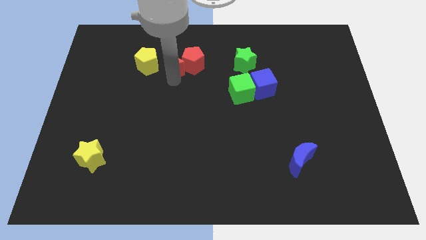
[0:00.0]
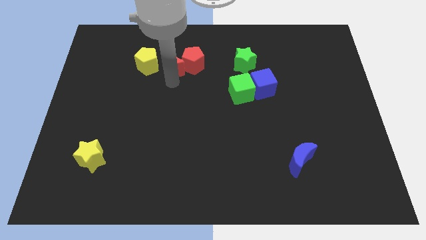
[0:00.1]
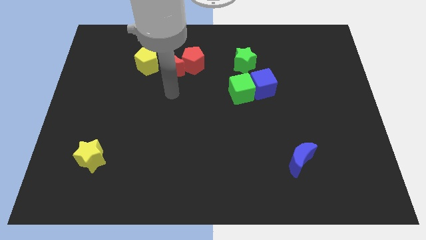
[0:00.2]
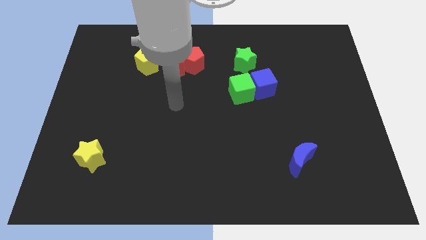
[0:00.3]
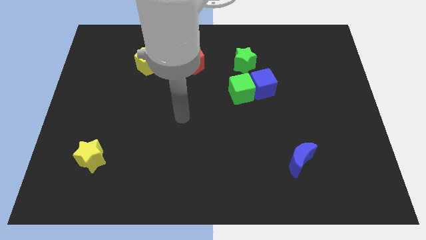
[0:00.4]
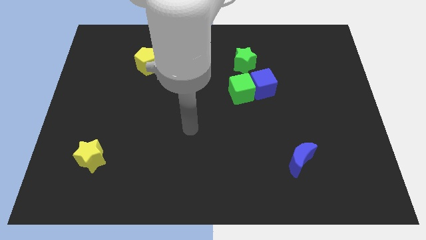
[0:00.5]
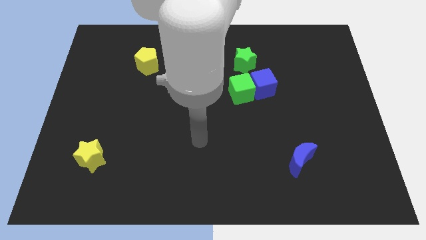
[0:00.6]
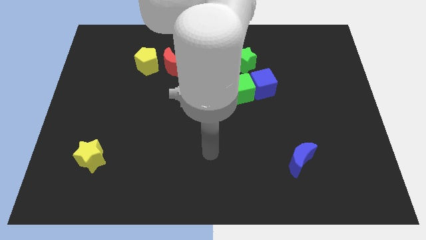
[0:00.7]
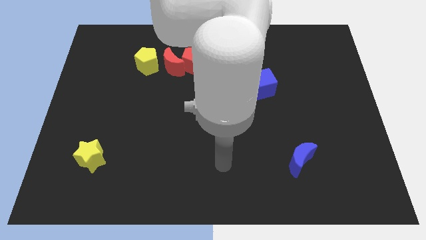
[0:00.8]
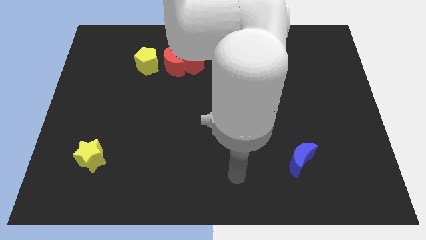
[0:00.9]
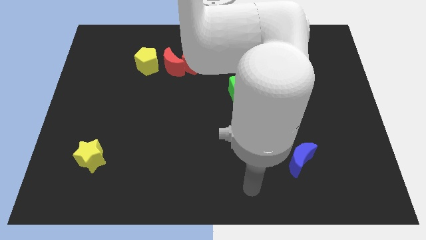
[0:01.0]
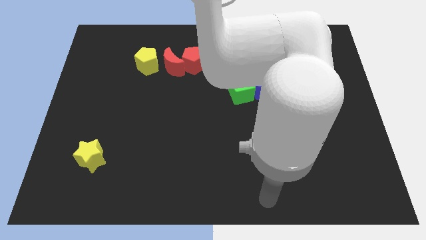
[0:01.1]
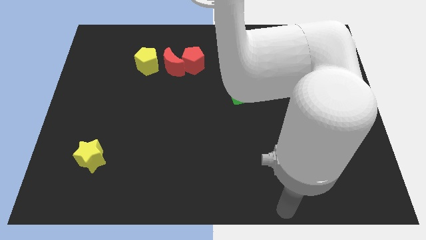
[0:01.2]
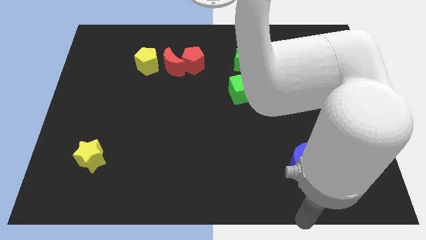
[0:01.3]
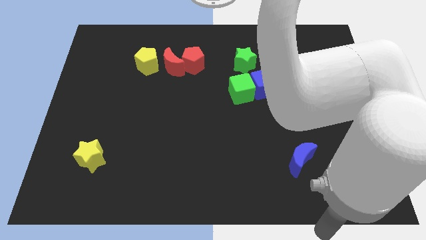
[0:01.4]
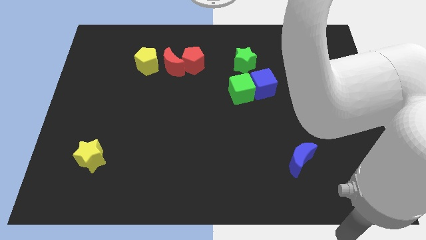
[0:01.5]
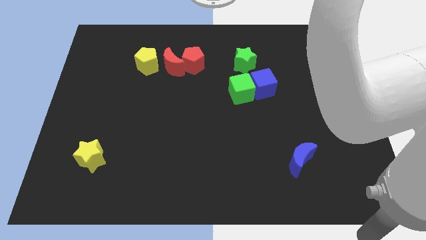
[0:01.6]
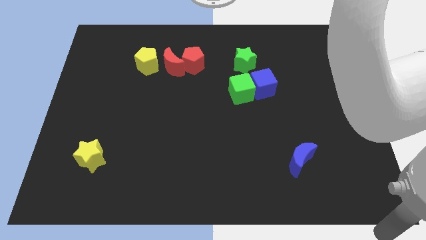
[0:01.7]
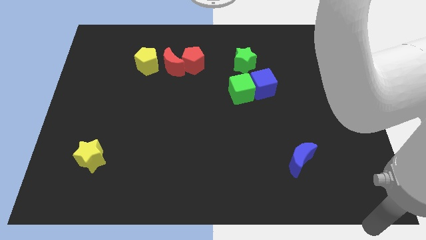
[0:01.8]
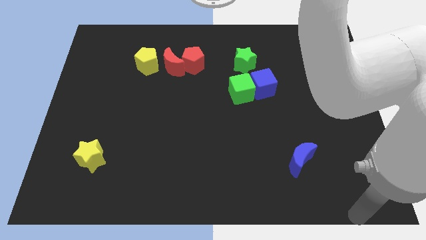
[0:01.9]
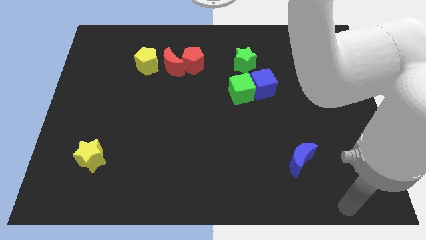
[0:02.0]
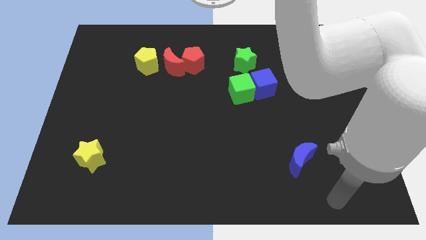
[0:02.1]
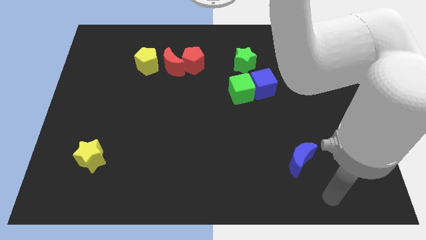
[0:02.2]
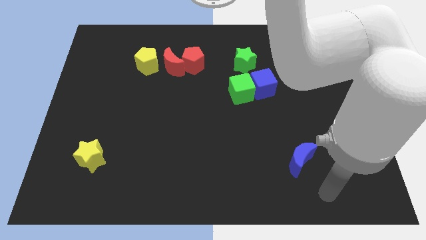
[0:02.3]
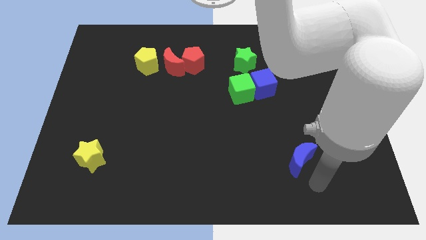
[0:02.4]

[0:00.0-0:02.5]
move your arm away from the red crescent

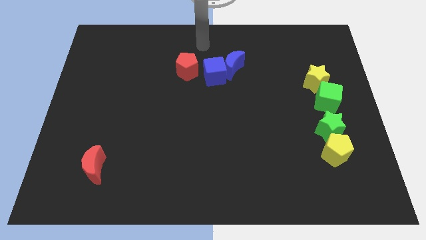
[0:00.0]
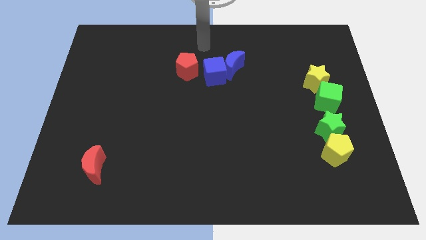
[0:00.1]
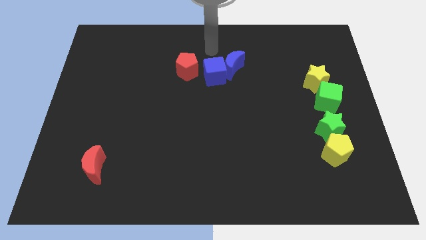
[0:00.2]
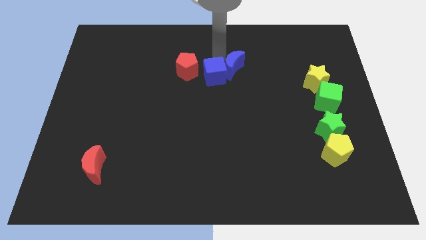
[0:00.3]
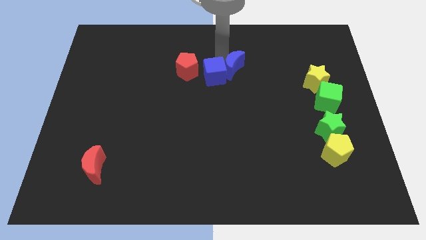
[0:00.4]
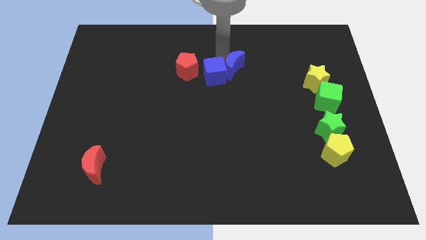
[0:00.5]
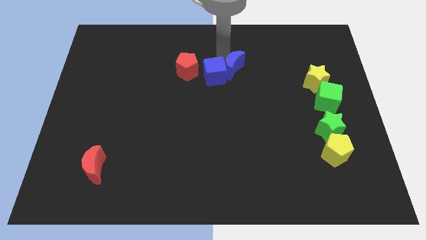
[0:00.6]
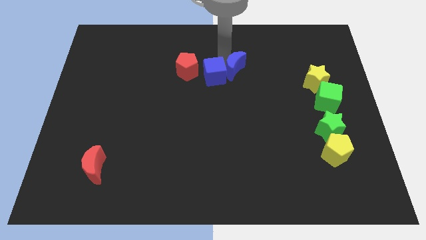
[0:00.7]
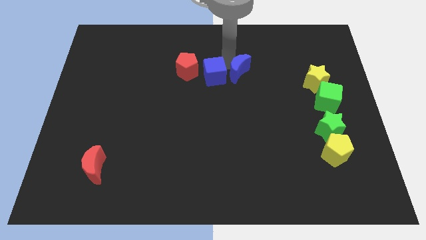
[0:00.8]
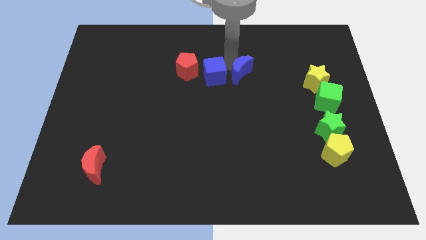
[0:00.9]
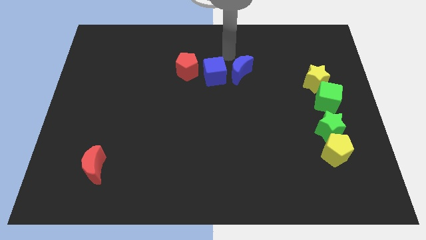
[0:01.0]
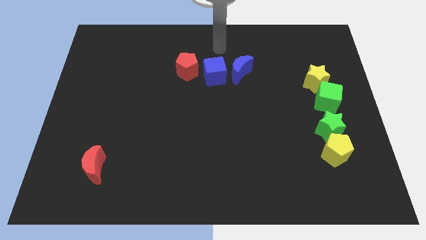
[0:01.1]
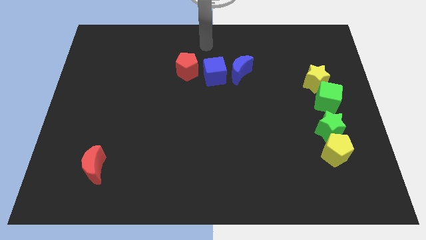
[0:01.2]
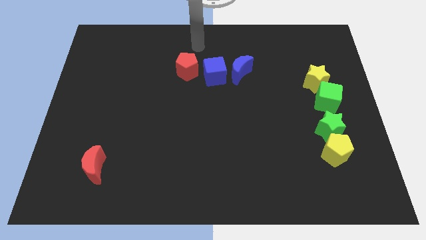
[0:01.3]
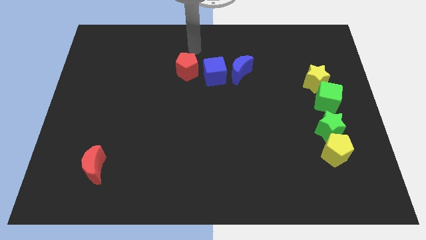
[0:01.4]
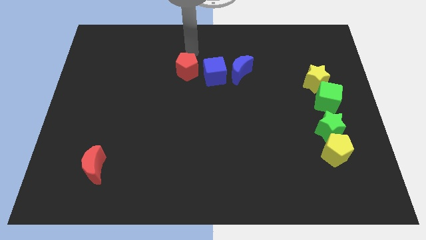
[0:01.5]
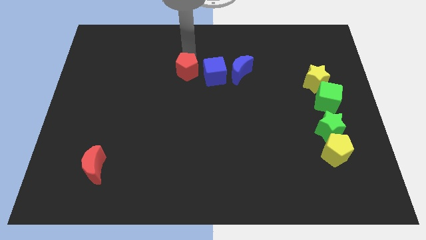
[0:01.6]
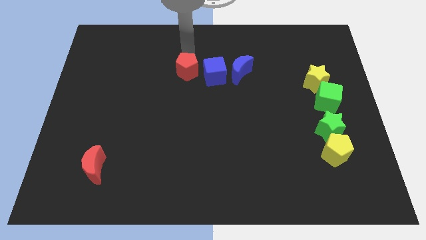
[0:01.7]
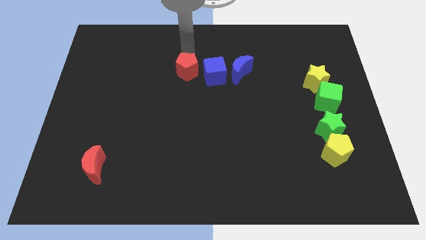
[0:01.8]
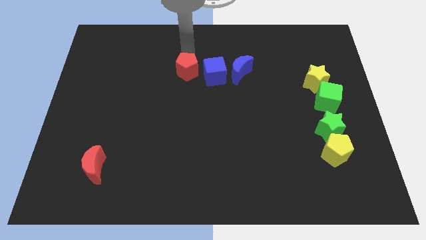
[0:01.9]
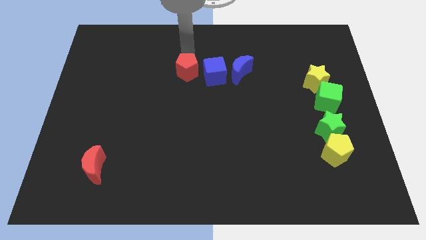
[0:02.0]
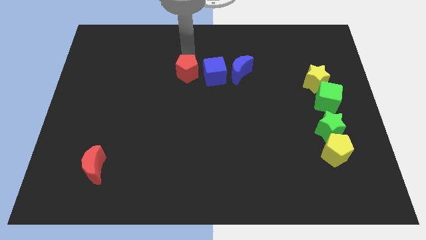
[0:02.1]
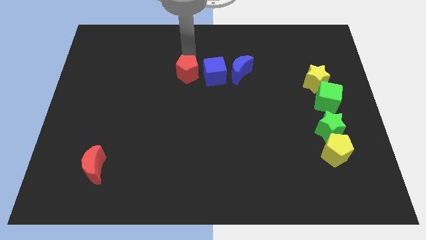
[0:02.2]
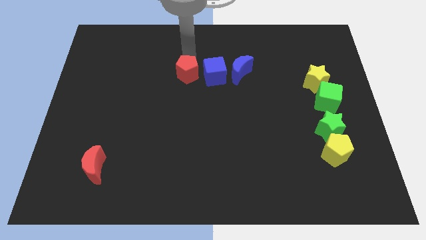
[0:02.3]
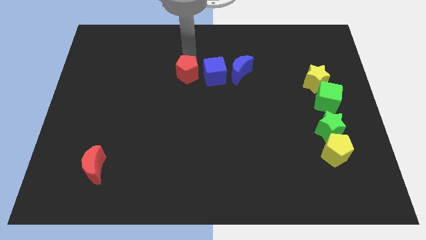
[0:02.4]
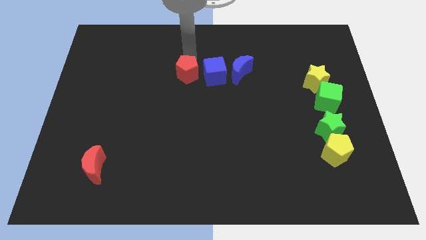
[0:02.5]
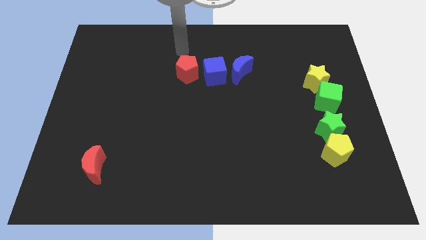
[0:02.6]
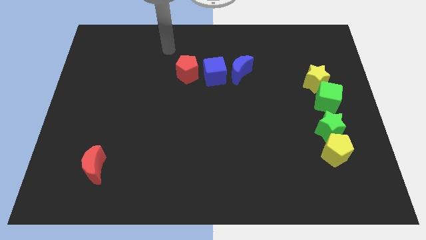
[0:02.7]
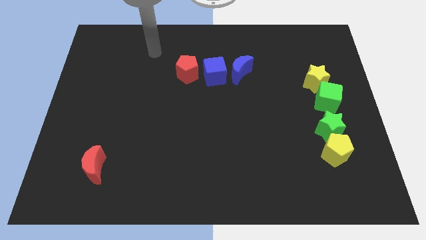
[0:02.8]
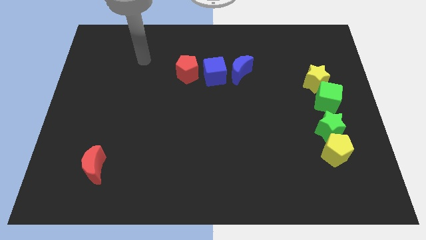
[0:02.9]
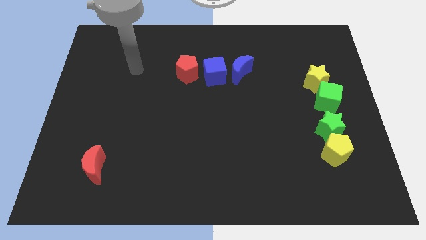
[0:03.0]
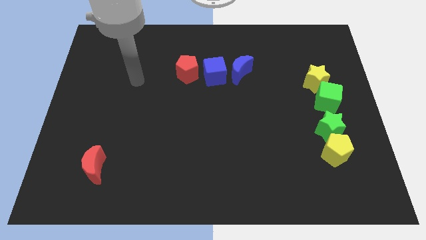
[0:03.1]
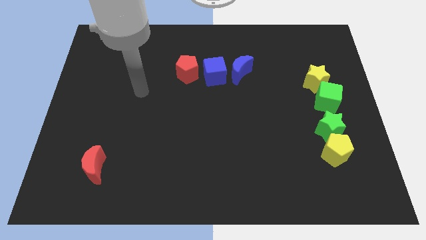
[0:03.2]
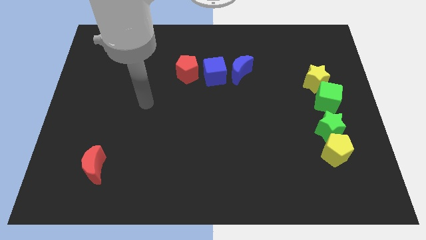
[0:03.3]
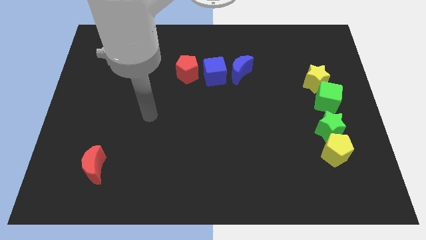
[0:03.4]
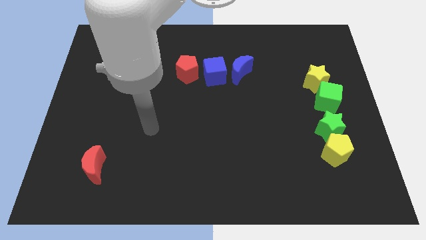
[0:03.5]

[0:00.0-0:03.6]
adjust group of blocks to make a horizontal line

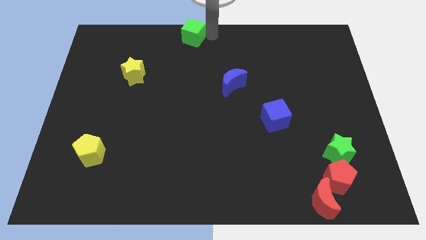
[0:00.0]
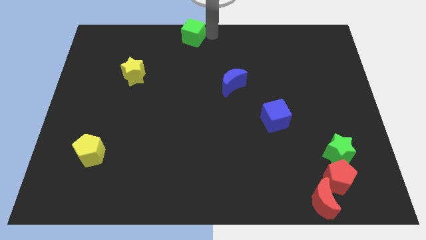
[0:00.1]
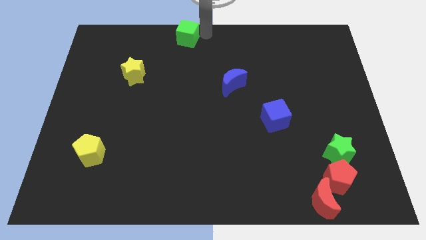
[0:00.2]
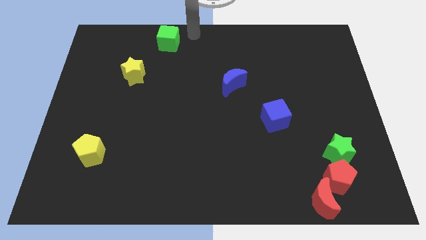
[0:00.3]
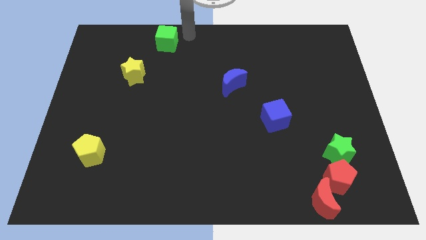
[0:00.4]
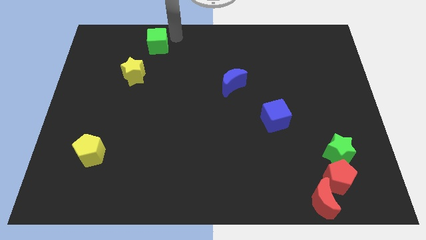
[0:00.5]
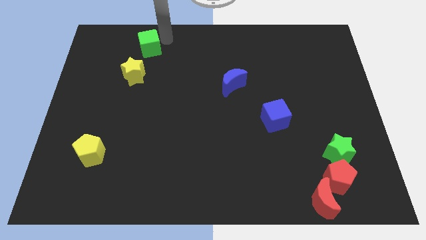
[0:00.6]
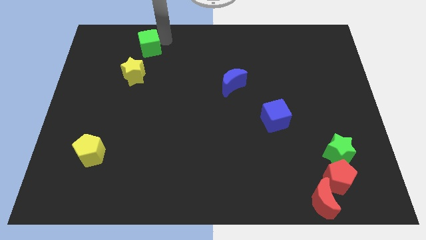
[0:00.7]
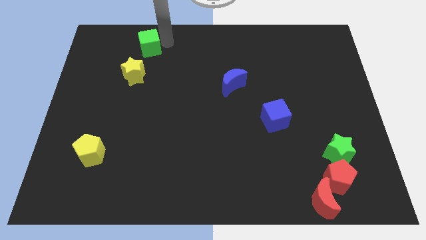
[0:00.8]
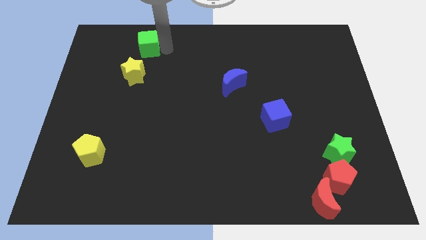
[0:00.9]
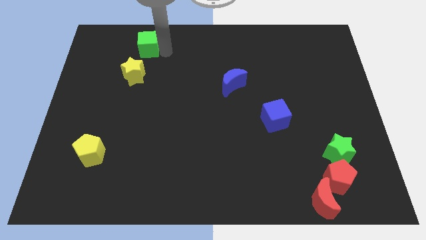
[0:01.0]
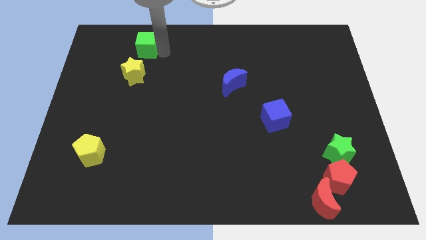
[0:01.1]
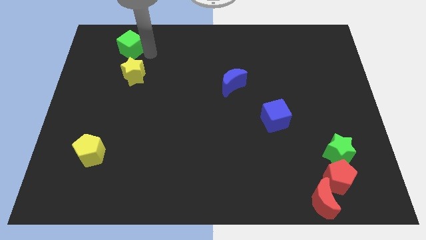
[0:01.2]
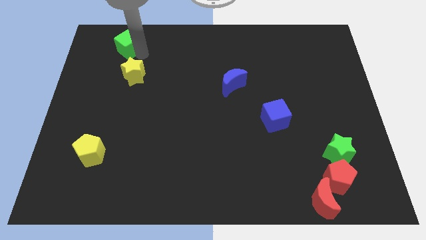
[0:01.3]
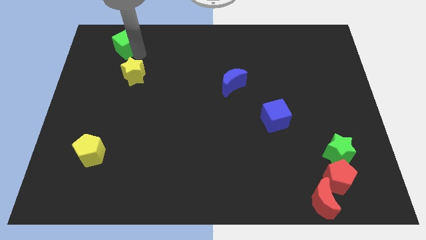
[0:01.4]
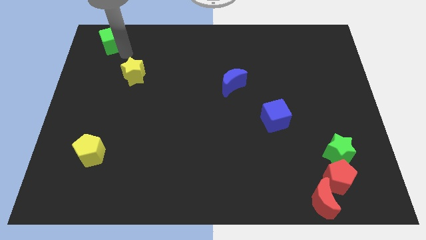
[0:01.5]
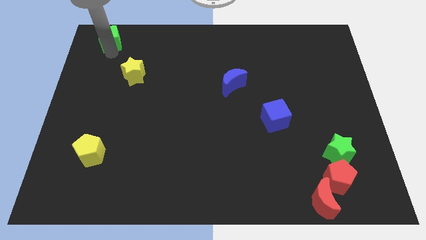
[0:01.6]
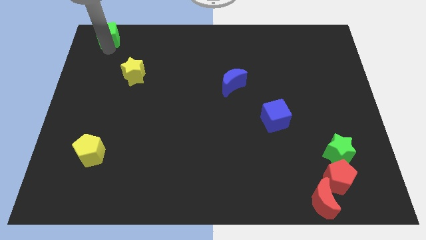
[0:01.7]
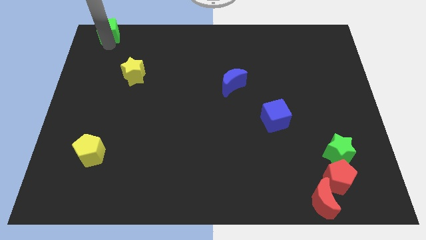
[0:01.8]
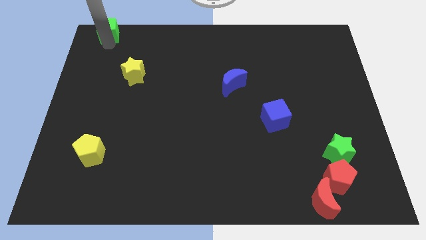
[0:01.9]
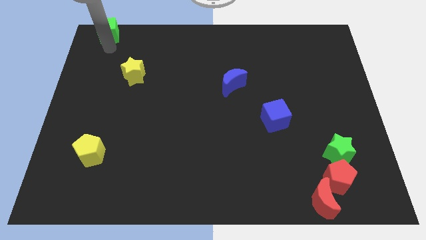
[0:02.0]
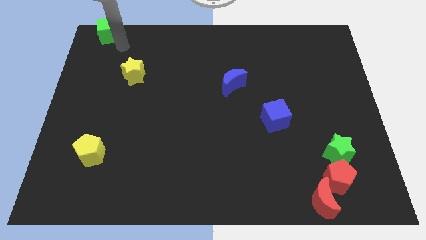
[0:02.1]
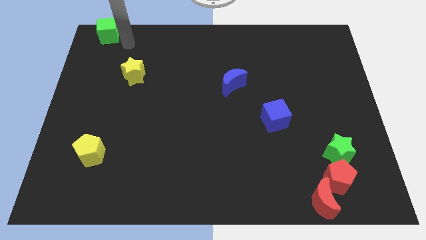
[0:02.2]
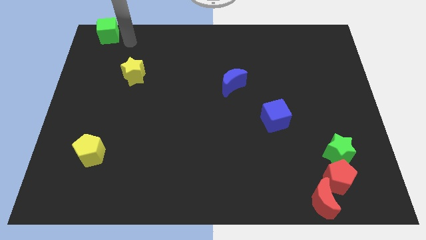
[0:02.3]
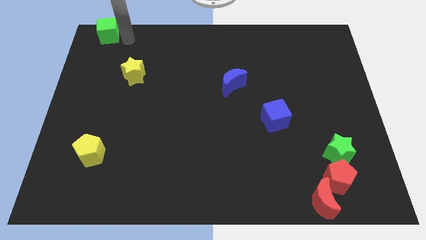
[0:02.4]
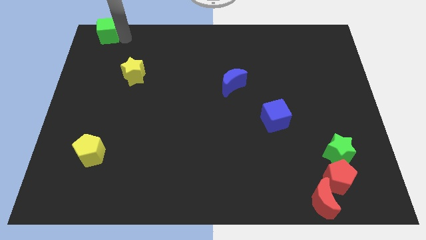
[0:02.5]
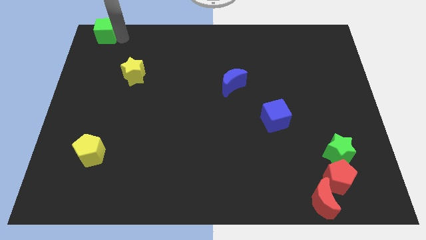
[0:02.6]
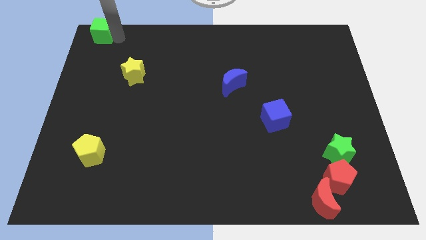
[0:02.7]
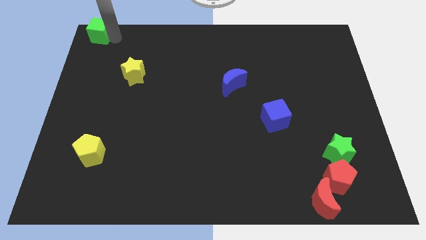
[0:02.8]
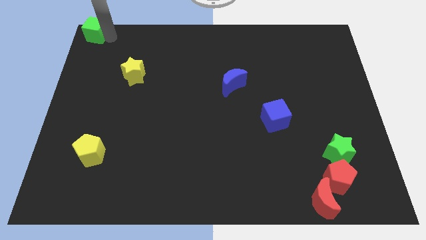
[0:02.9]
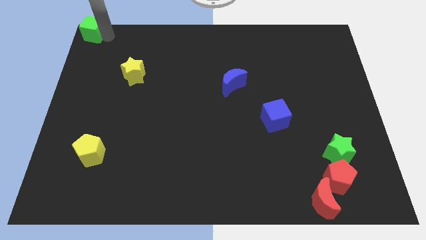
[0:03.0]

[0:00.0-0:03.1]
place the green cube to the top left
